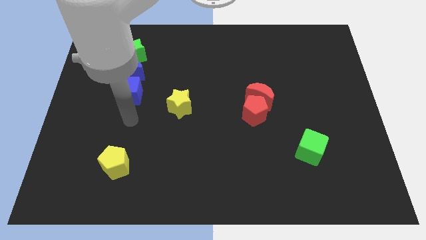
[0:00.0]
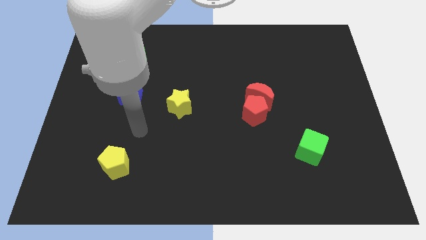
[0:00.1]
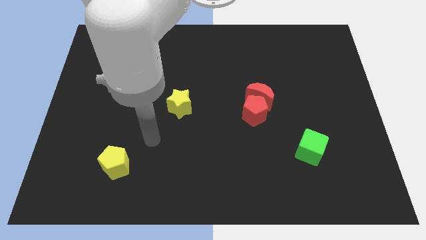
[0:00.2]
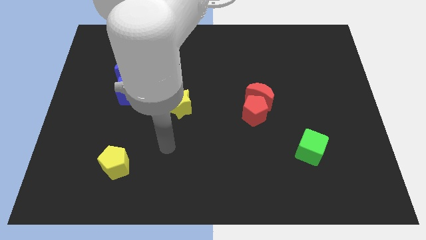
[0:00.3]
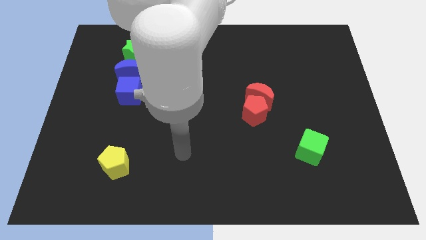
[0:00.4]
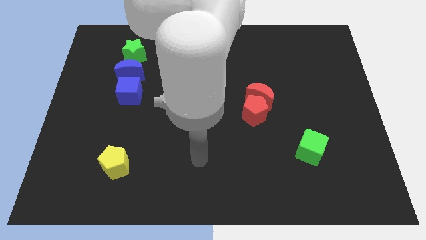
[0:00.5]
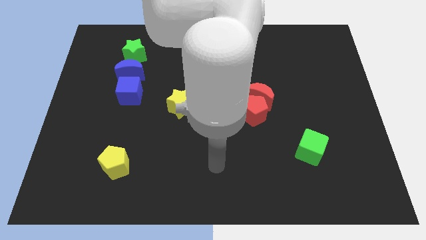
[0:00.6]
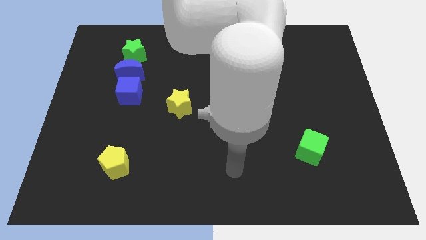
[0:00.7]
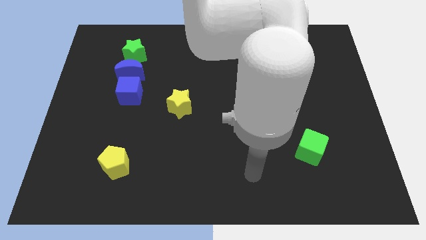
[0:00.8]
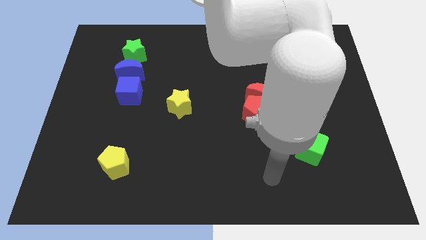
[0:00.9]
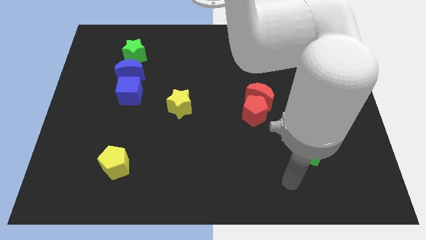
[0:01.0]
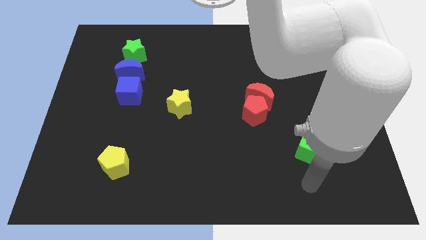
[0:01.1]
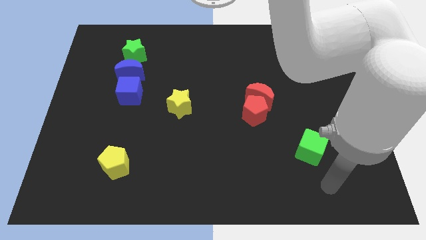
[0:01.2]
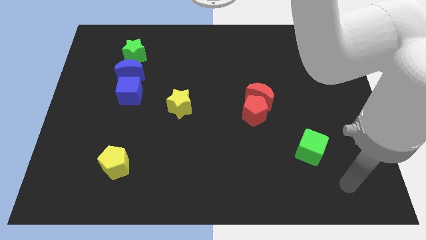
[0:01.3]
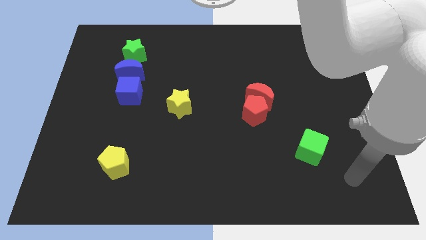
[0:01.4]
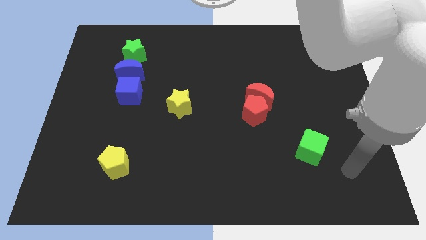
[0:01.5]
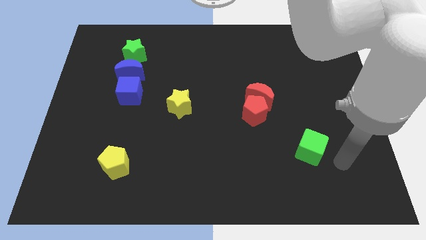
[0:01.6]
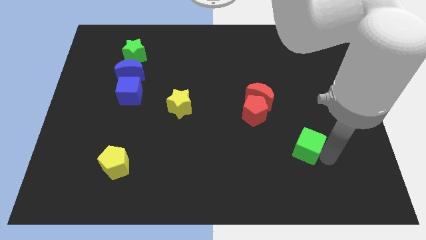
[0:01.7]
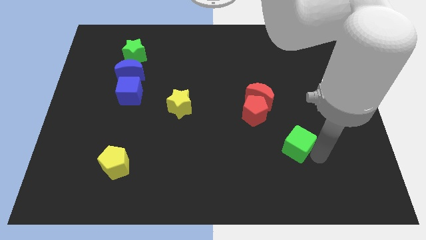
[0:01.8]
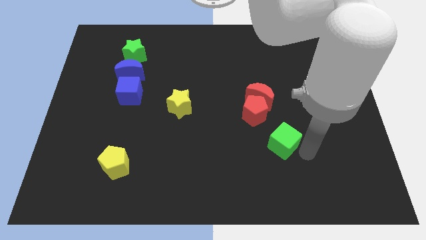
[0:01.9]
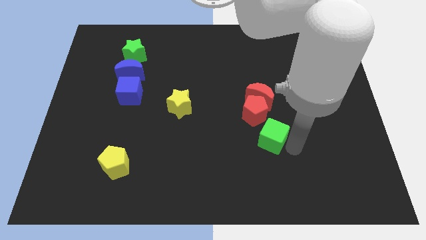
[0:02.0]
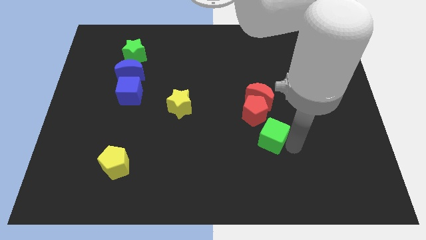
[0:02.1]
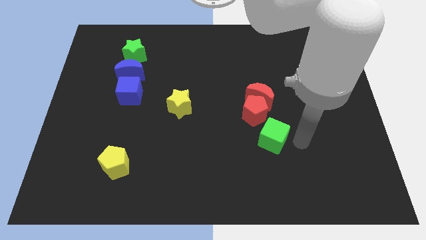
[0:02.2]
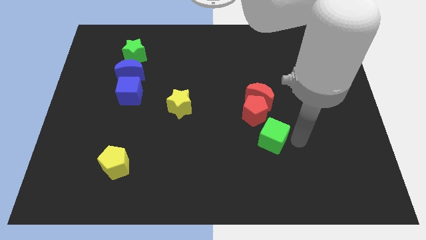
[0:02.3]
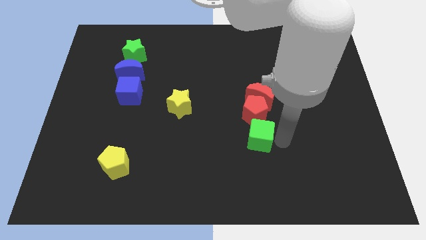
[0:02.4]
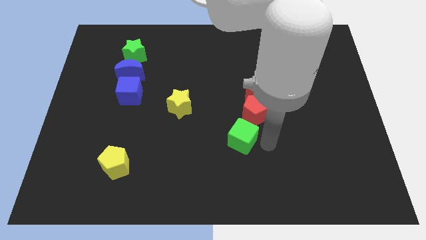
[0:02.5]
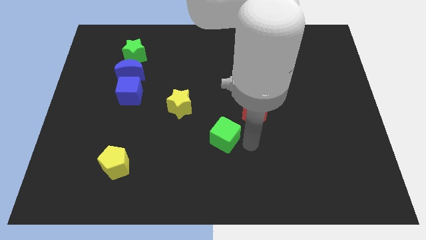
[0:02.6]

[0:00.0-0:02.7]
place the green cube below the red pentagon

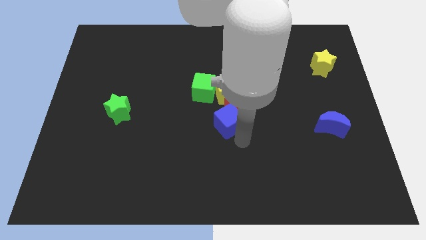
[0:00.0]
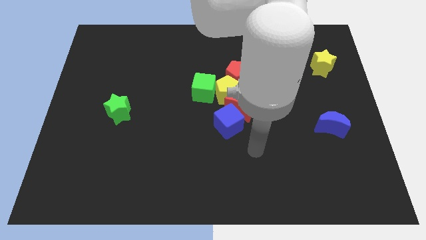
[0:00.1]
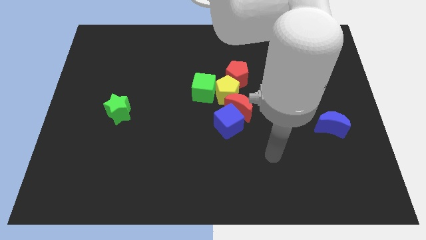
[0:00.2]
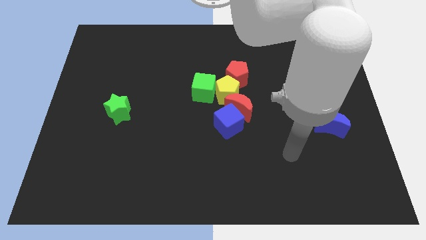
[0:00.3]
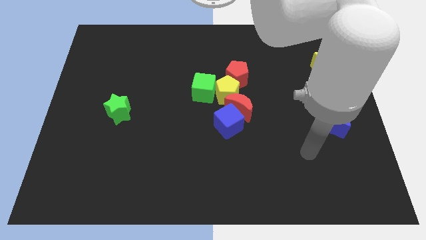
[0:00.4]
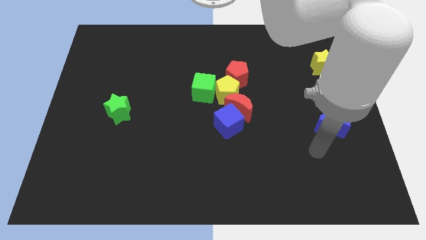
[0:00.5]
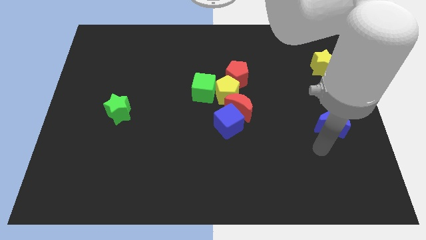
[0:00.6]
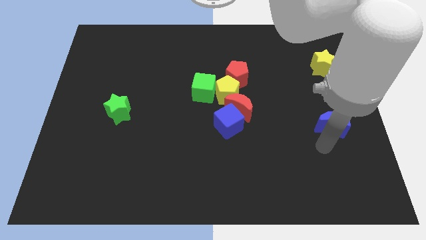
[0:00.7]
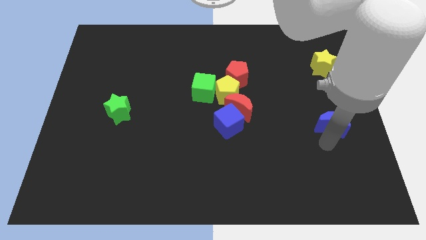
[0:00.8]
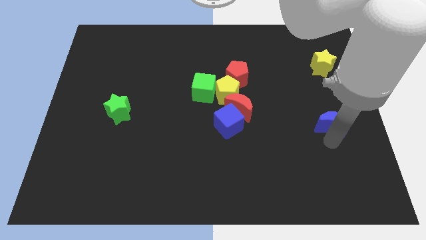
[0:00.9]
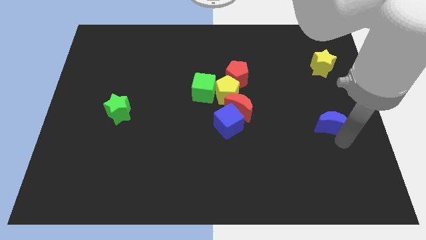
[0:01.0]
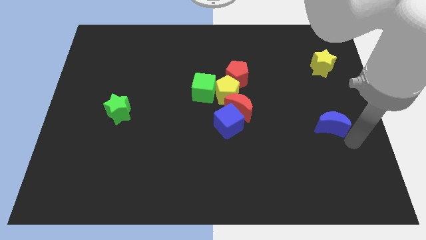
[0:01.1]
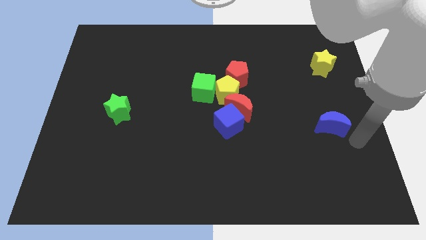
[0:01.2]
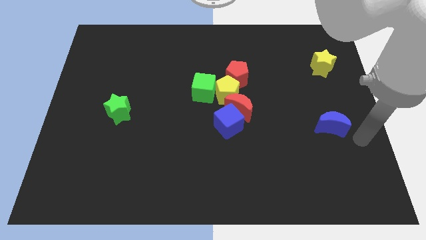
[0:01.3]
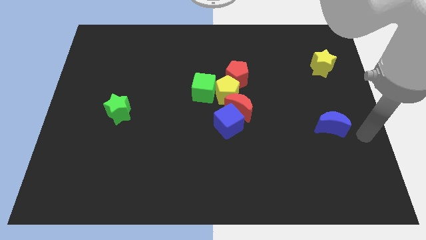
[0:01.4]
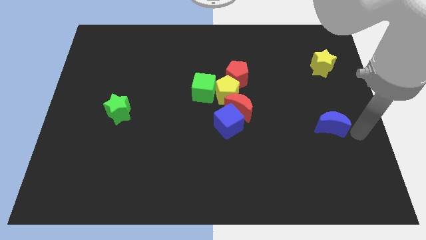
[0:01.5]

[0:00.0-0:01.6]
move yourself to the right side of the blue crescent

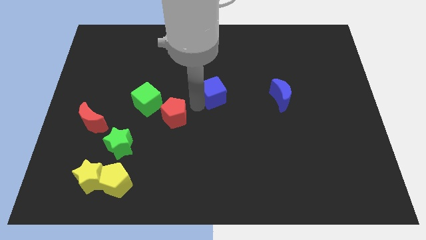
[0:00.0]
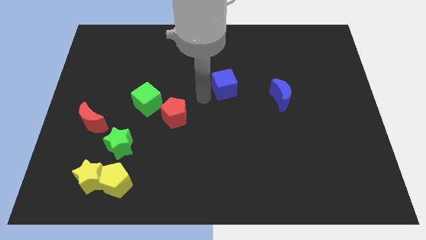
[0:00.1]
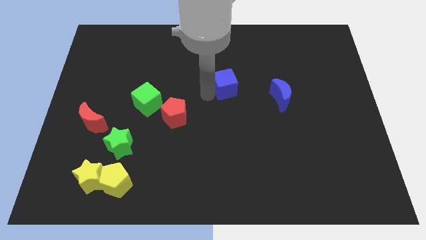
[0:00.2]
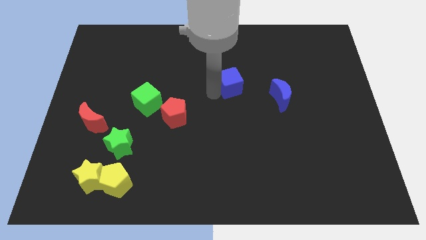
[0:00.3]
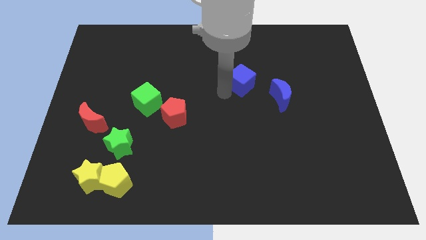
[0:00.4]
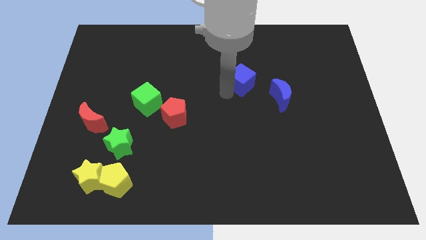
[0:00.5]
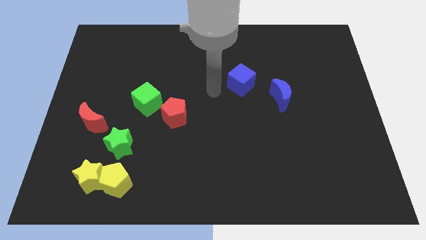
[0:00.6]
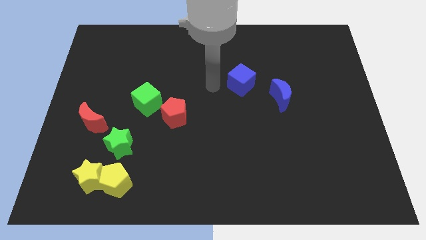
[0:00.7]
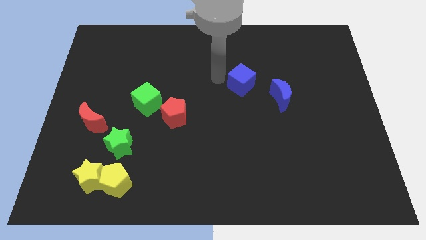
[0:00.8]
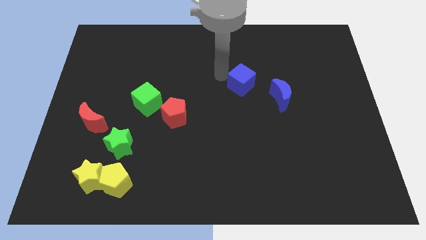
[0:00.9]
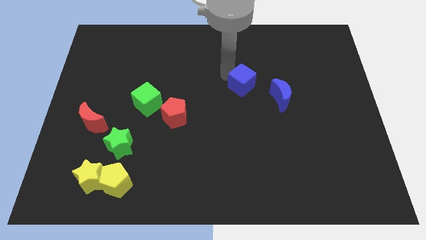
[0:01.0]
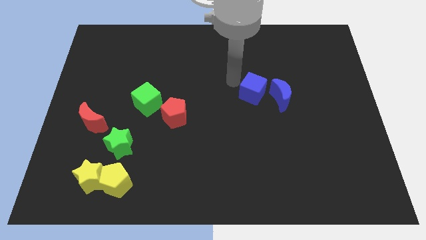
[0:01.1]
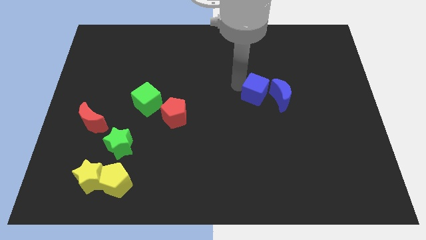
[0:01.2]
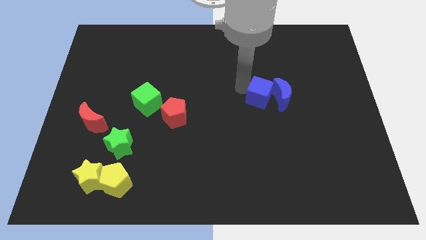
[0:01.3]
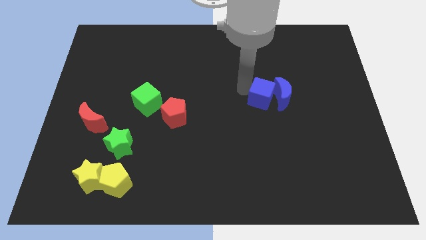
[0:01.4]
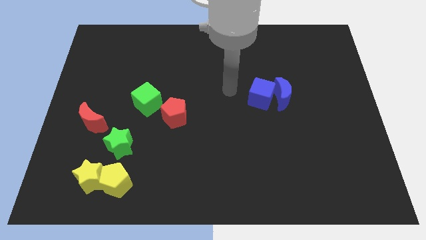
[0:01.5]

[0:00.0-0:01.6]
move the blue cube into the blue moon

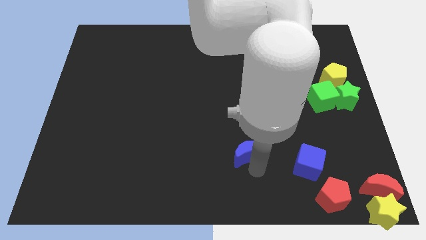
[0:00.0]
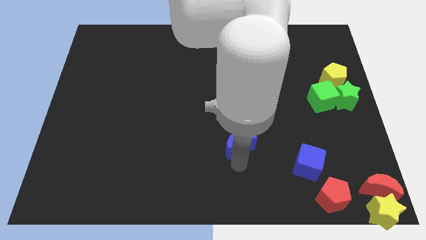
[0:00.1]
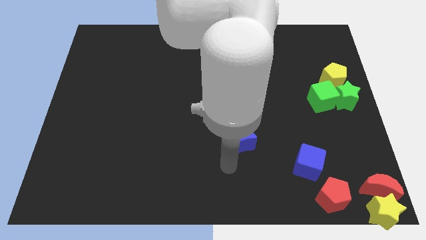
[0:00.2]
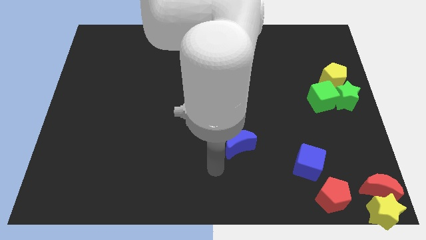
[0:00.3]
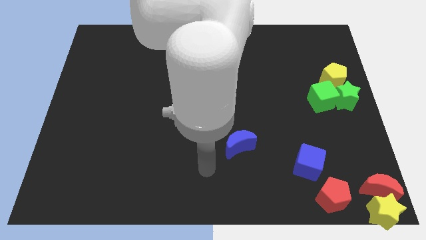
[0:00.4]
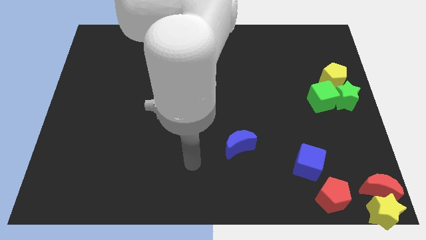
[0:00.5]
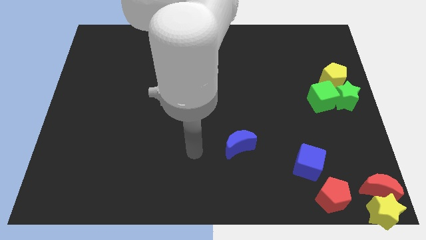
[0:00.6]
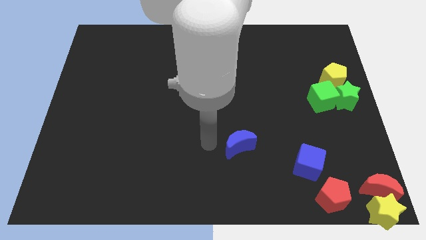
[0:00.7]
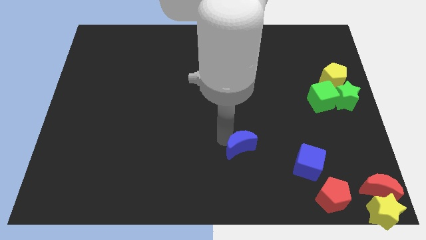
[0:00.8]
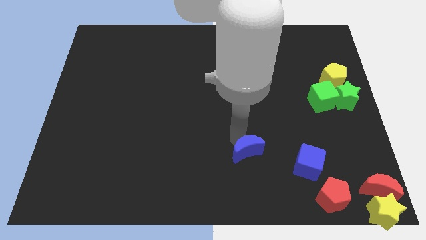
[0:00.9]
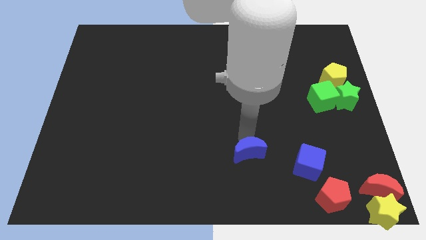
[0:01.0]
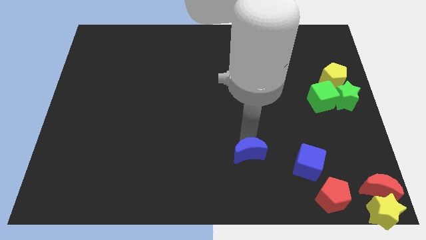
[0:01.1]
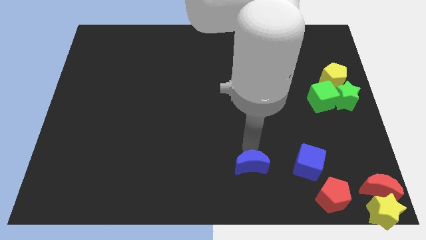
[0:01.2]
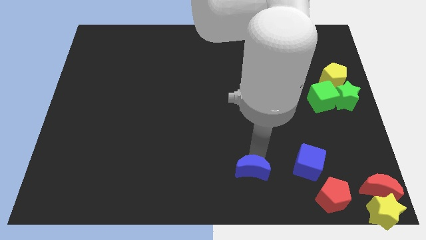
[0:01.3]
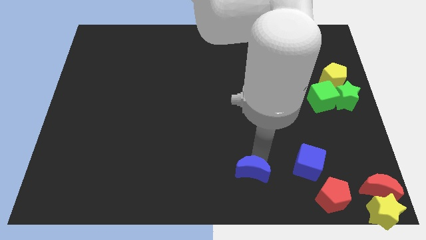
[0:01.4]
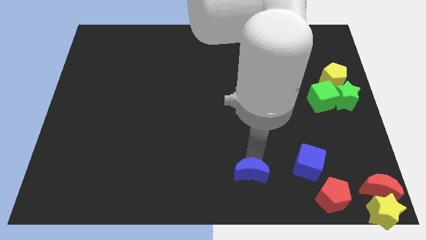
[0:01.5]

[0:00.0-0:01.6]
push the blue moon downward

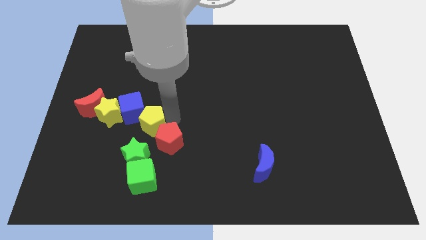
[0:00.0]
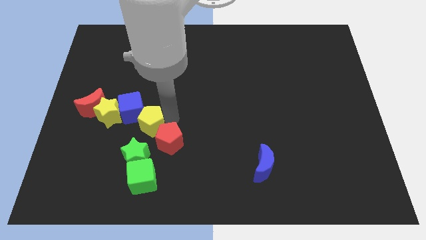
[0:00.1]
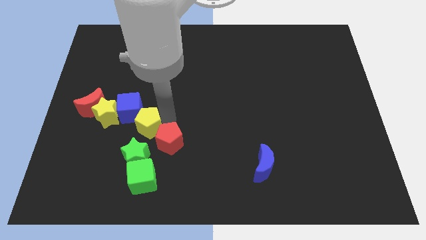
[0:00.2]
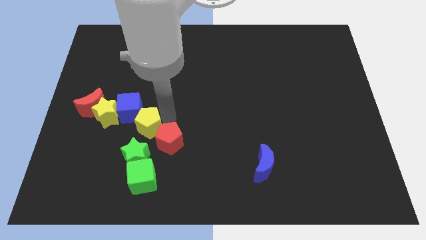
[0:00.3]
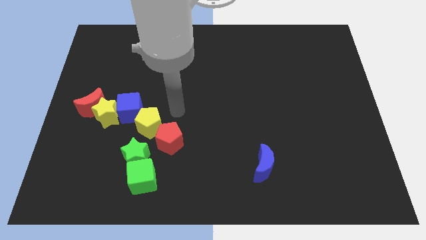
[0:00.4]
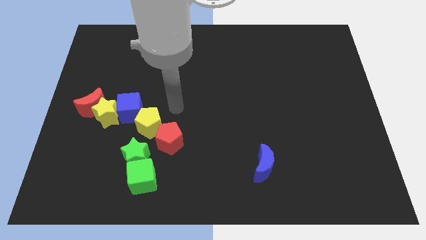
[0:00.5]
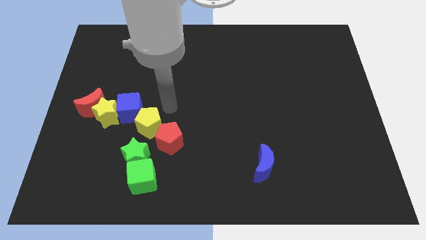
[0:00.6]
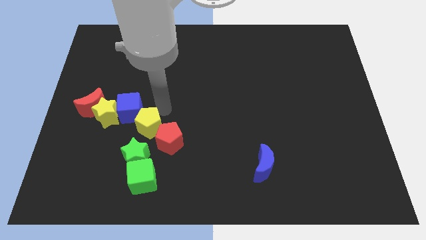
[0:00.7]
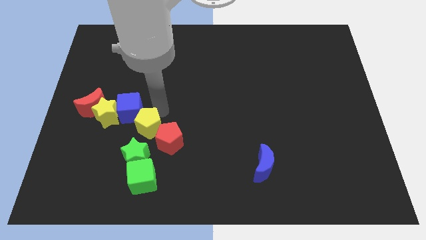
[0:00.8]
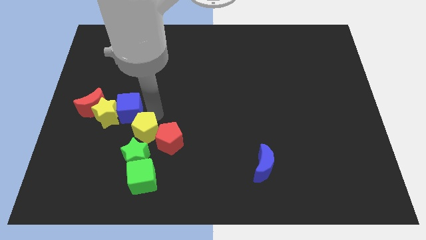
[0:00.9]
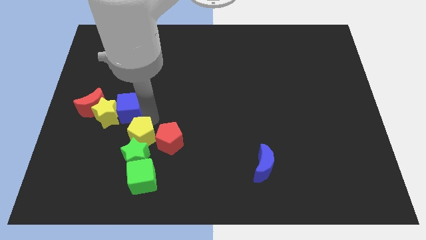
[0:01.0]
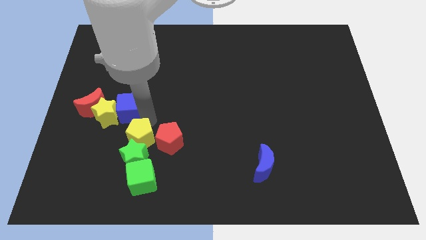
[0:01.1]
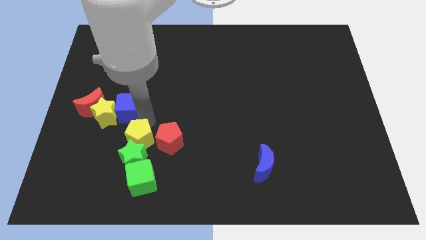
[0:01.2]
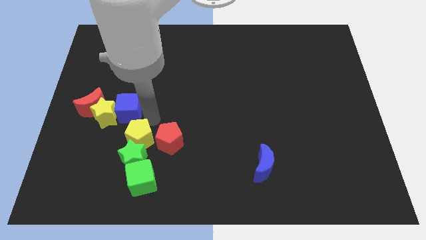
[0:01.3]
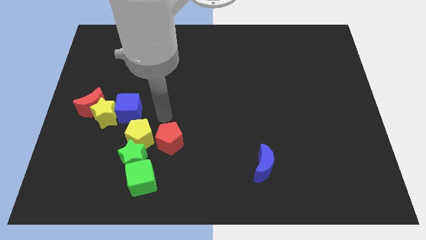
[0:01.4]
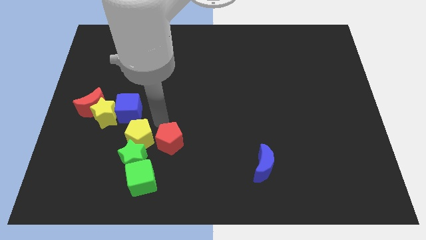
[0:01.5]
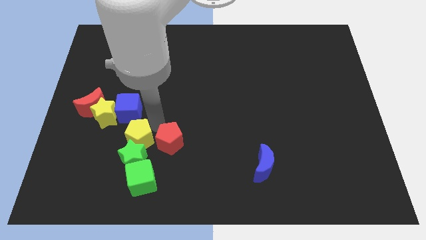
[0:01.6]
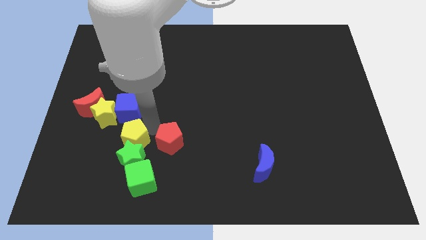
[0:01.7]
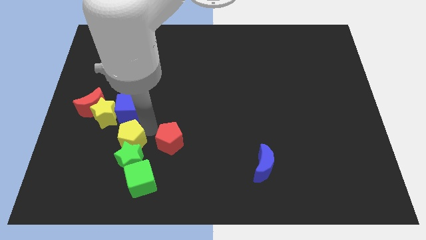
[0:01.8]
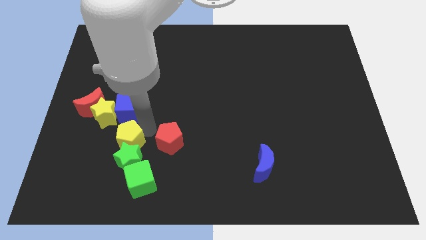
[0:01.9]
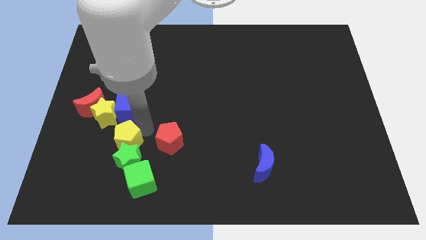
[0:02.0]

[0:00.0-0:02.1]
push the yellow pentagon into the green star
